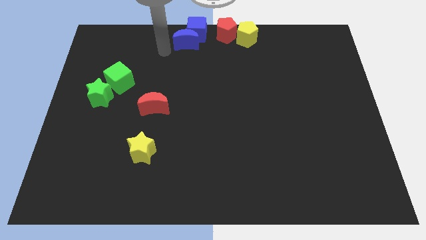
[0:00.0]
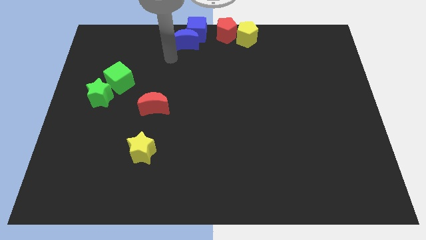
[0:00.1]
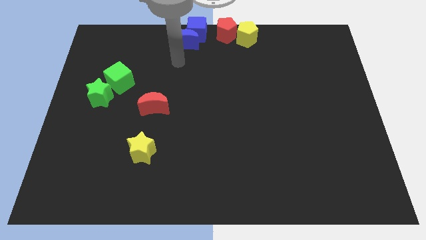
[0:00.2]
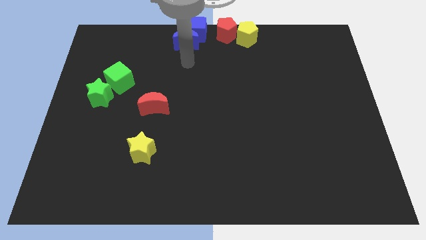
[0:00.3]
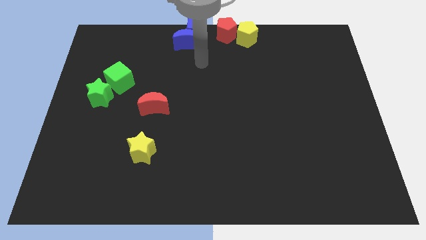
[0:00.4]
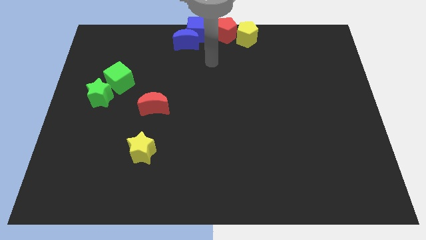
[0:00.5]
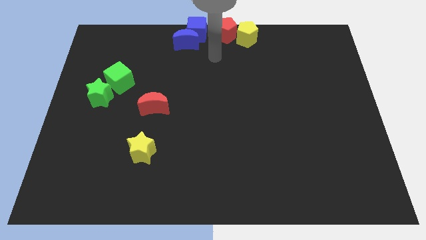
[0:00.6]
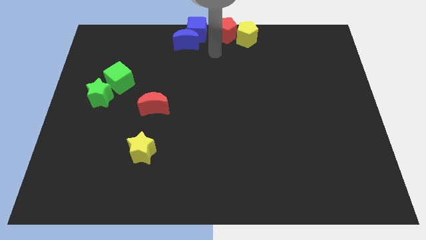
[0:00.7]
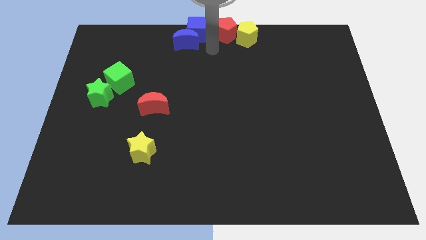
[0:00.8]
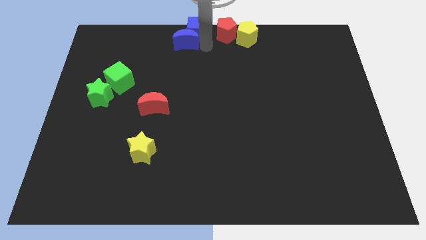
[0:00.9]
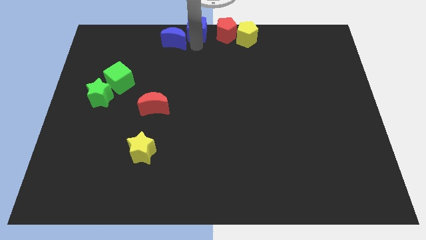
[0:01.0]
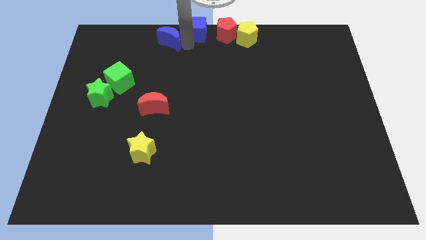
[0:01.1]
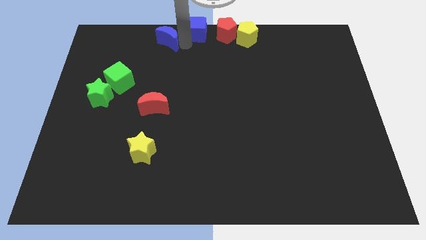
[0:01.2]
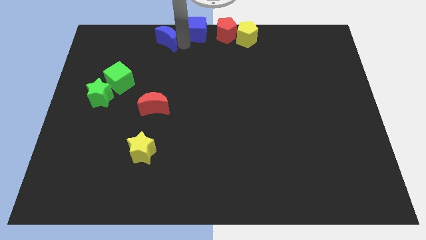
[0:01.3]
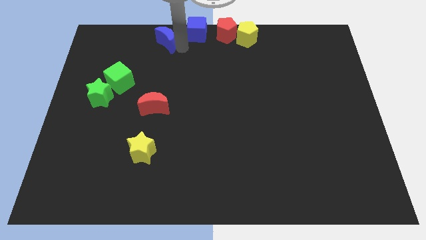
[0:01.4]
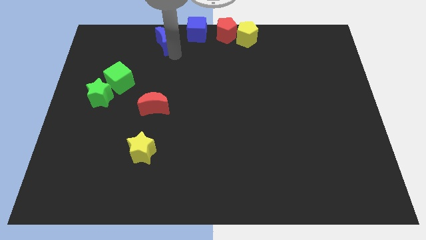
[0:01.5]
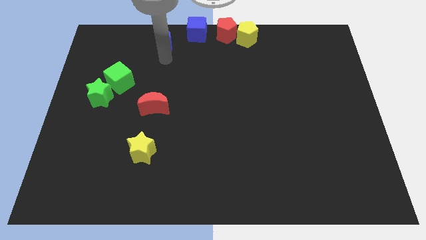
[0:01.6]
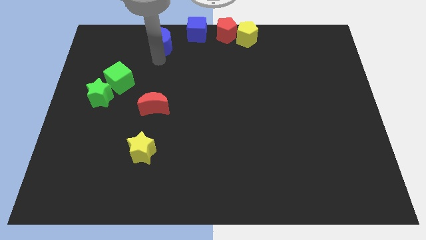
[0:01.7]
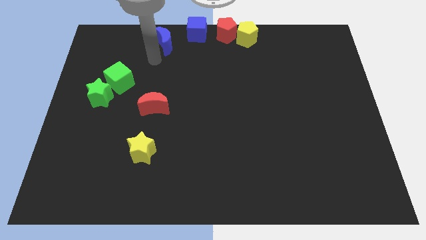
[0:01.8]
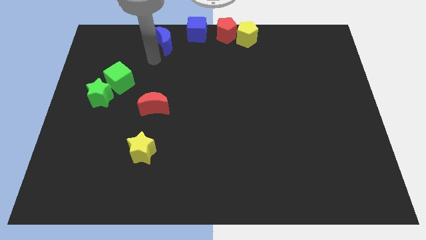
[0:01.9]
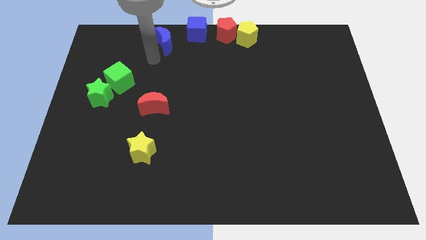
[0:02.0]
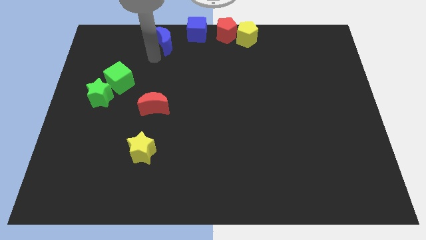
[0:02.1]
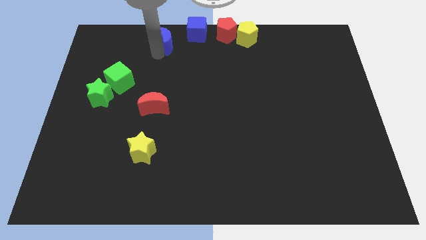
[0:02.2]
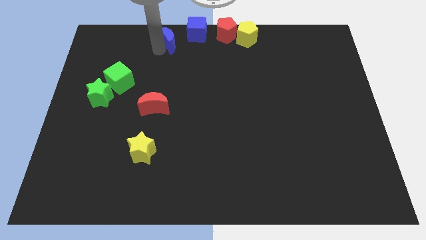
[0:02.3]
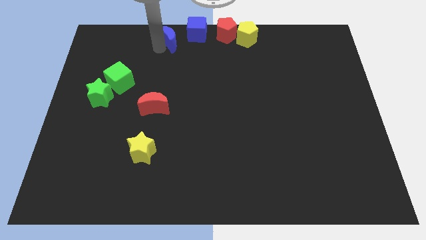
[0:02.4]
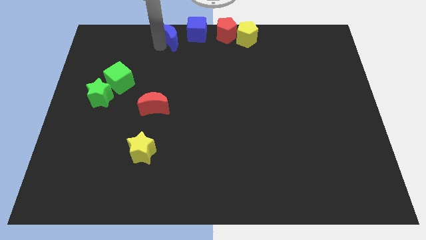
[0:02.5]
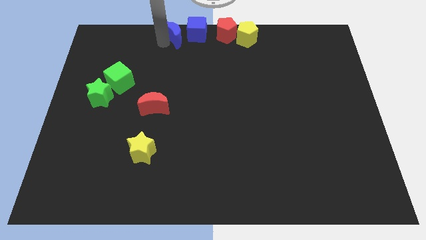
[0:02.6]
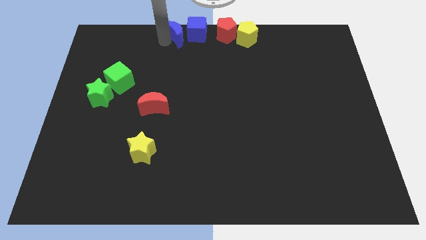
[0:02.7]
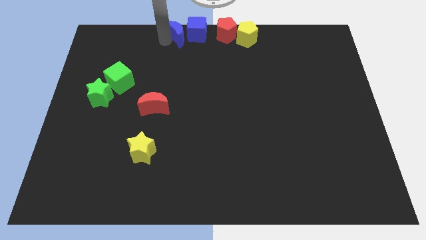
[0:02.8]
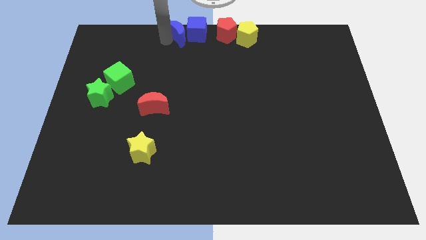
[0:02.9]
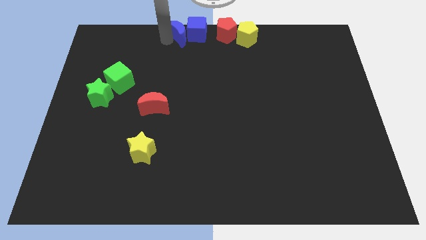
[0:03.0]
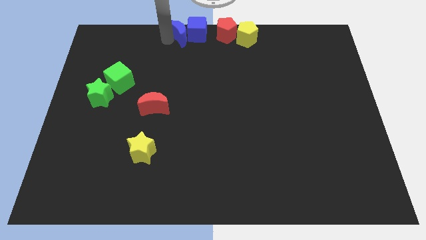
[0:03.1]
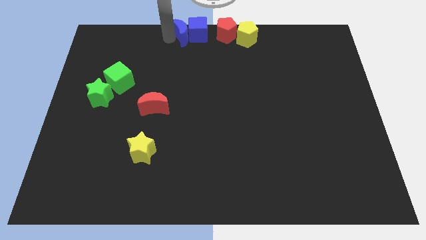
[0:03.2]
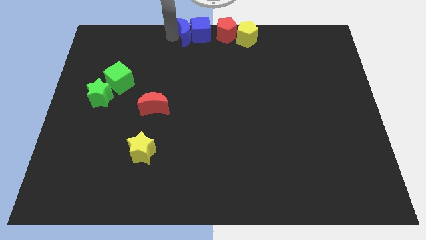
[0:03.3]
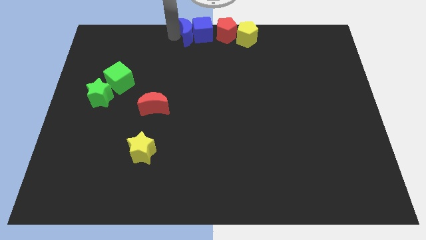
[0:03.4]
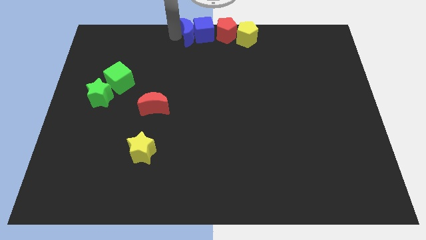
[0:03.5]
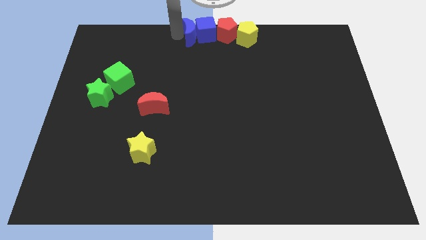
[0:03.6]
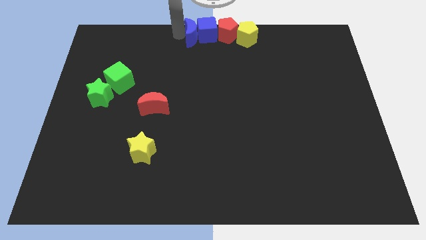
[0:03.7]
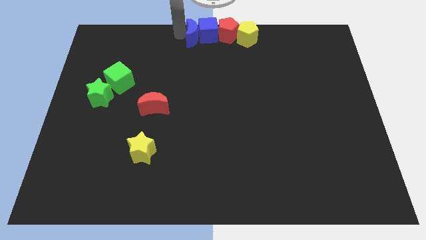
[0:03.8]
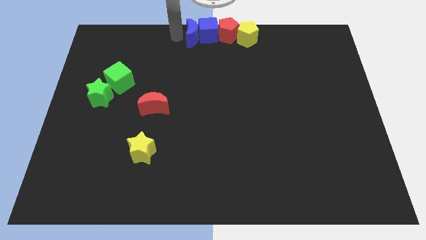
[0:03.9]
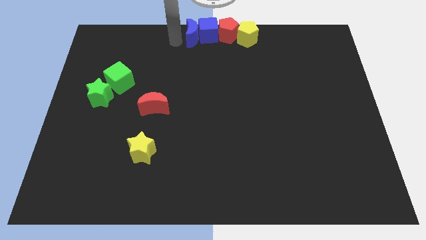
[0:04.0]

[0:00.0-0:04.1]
move the group of blue blocks into the left side of the red pentagon

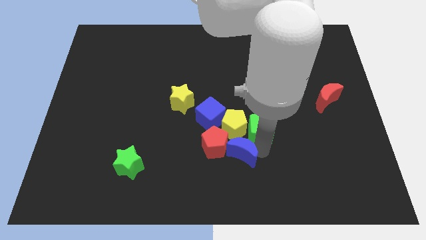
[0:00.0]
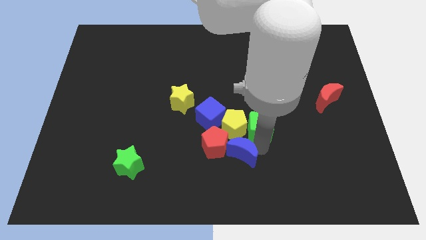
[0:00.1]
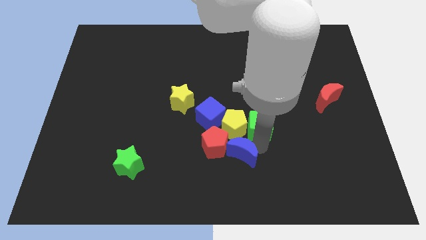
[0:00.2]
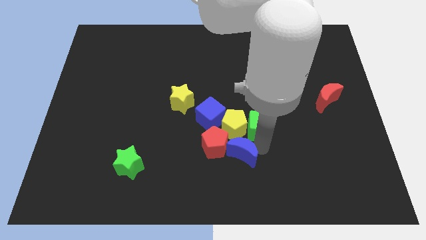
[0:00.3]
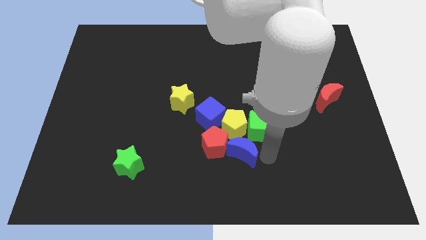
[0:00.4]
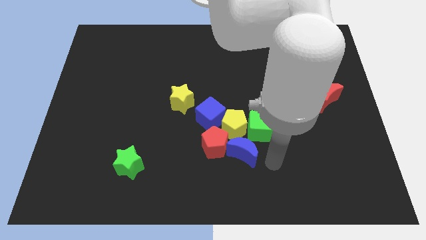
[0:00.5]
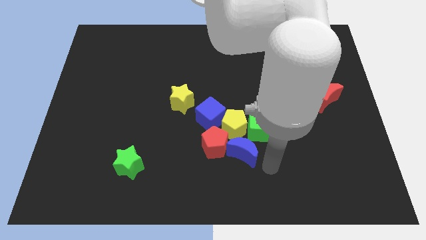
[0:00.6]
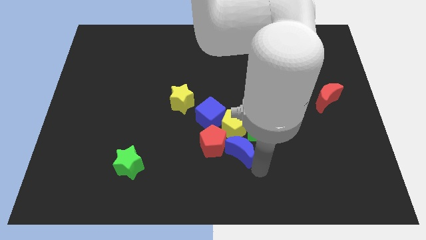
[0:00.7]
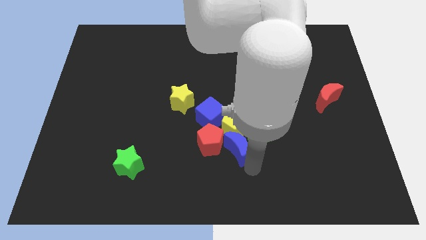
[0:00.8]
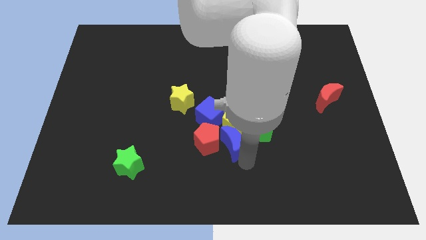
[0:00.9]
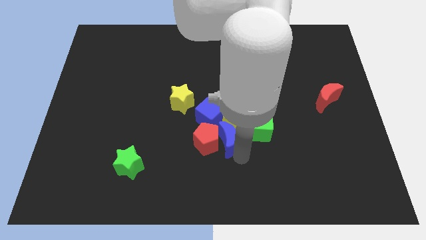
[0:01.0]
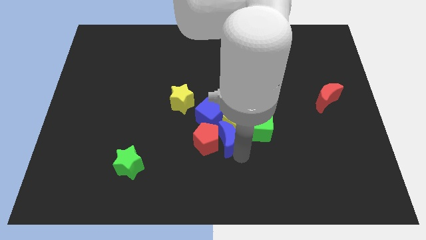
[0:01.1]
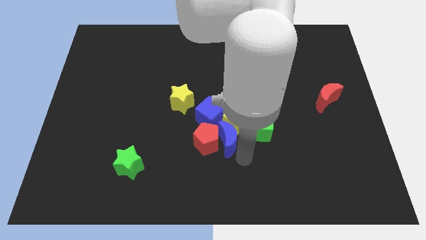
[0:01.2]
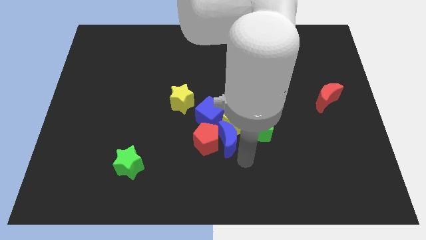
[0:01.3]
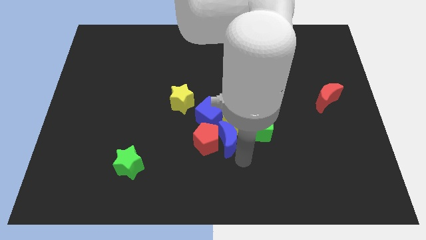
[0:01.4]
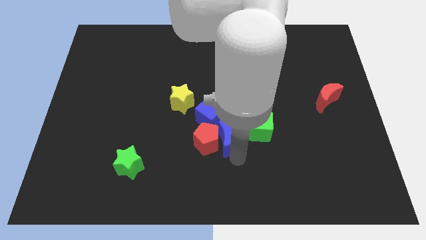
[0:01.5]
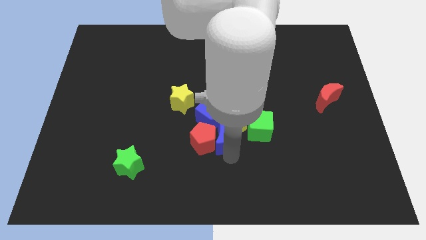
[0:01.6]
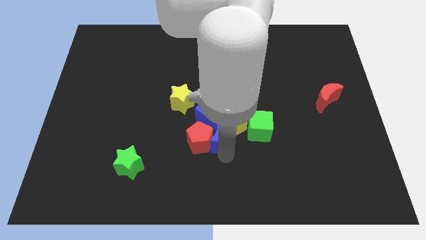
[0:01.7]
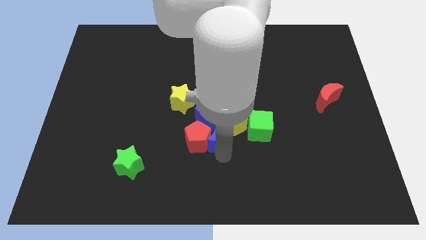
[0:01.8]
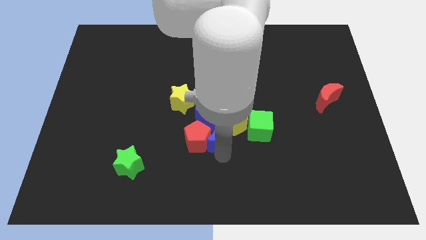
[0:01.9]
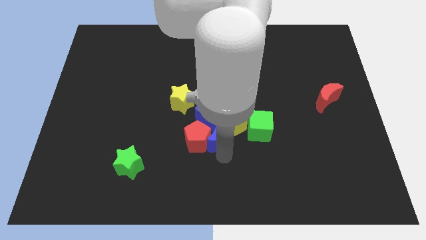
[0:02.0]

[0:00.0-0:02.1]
push the blue crescent into the red pentagon slightly towards the left

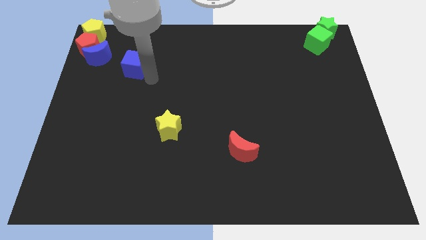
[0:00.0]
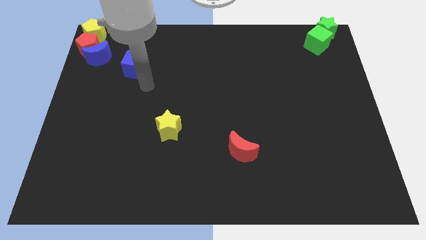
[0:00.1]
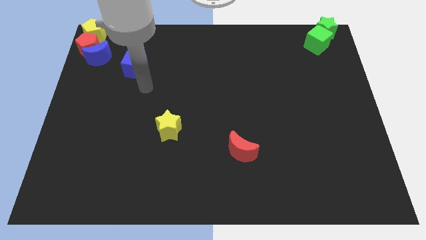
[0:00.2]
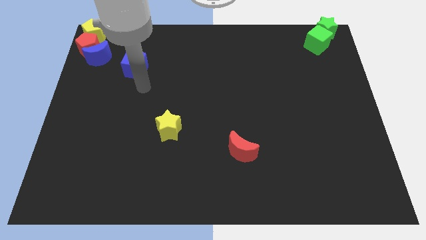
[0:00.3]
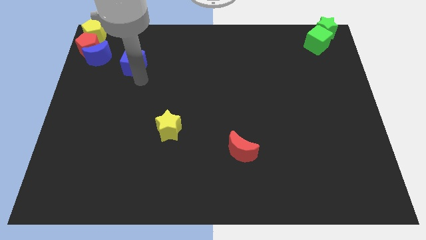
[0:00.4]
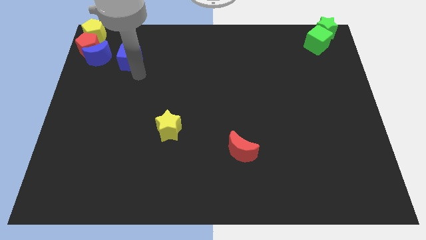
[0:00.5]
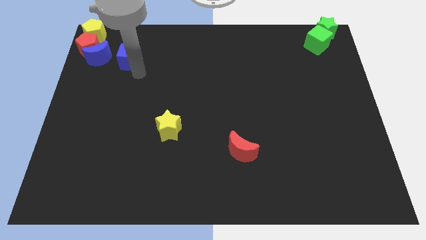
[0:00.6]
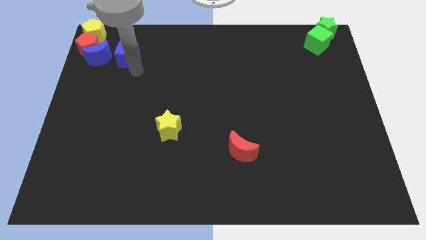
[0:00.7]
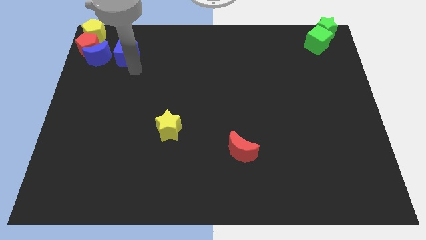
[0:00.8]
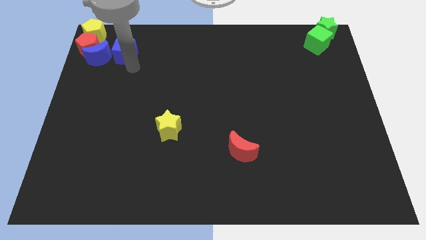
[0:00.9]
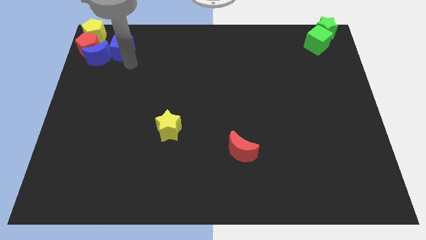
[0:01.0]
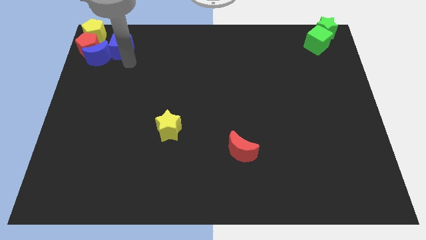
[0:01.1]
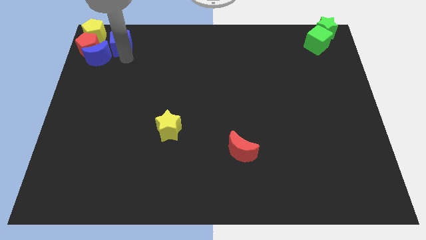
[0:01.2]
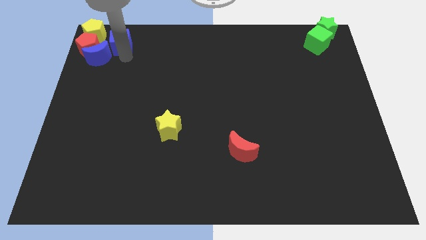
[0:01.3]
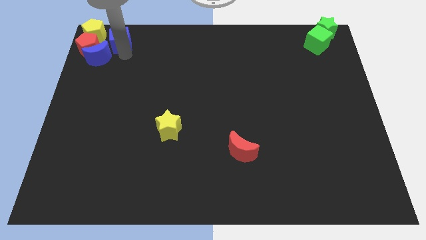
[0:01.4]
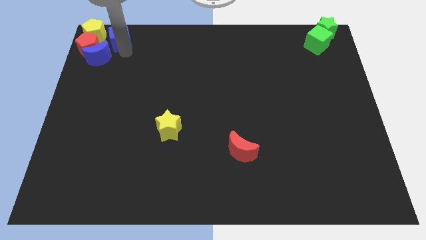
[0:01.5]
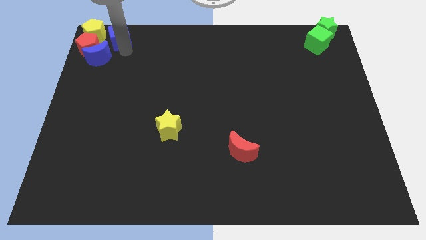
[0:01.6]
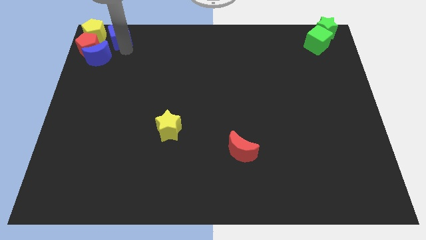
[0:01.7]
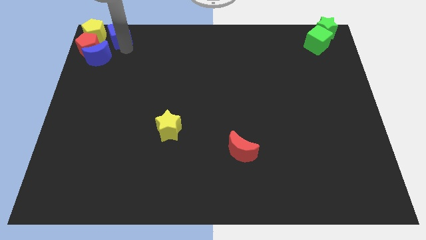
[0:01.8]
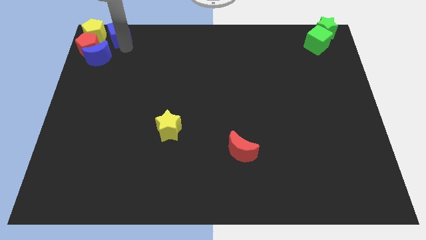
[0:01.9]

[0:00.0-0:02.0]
push the blue cube to the right of the yellow pentagon

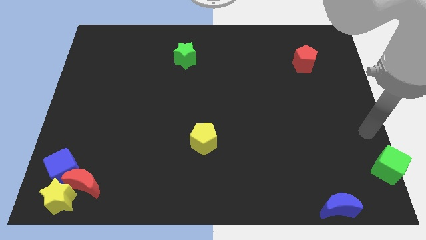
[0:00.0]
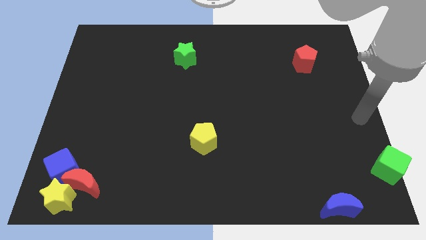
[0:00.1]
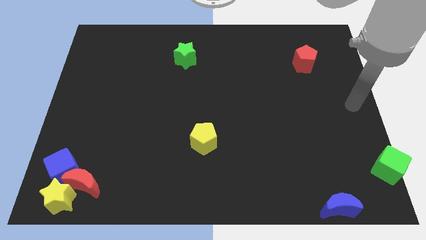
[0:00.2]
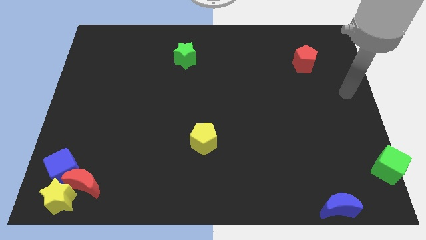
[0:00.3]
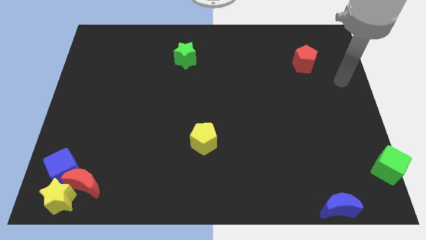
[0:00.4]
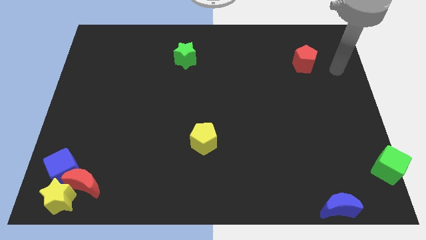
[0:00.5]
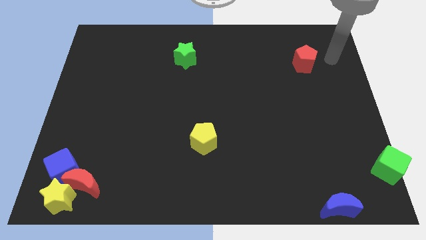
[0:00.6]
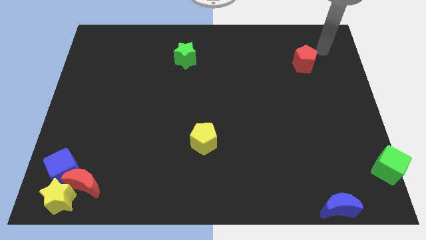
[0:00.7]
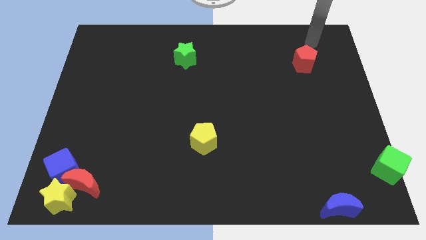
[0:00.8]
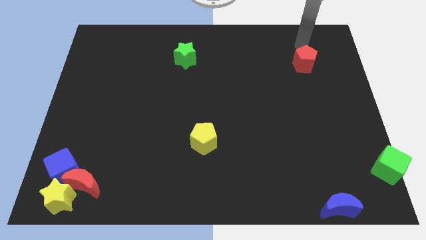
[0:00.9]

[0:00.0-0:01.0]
place your hand above the red penagon
